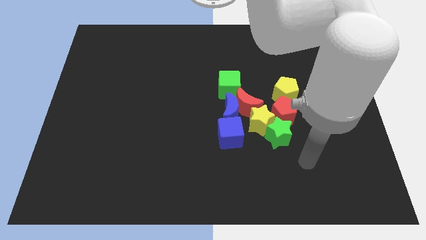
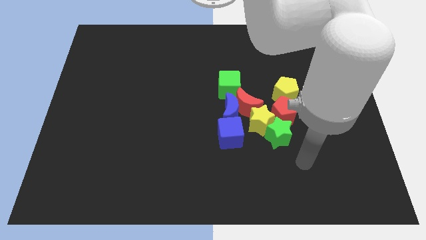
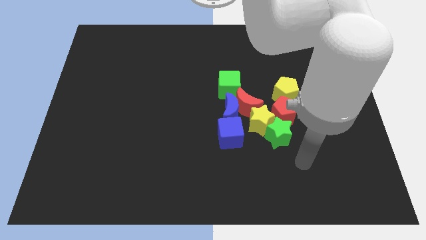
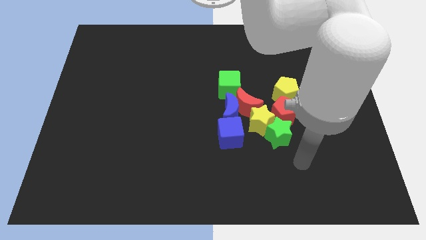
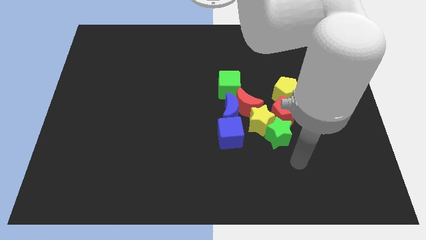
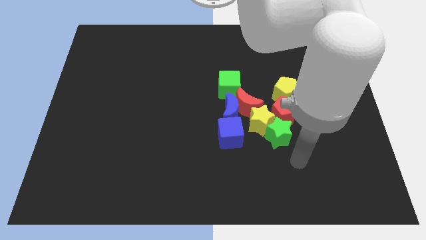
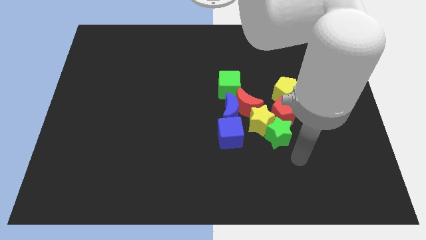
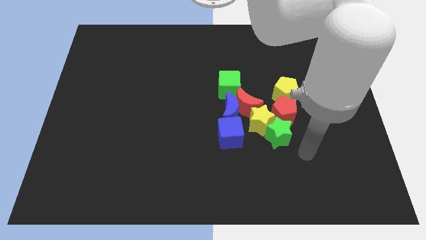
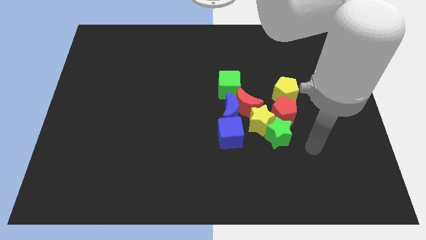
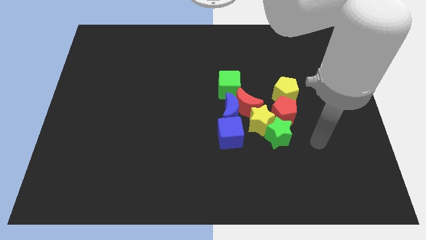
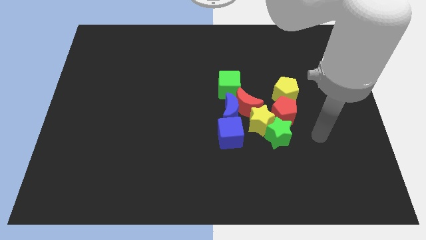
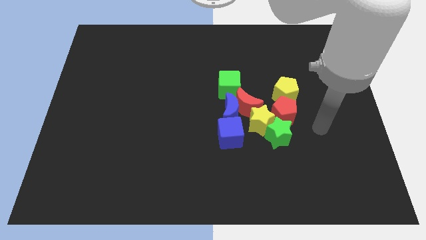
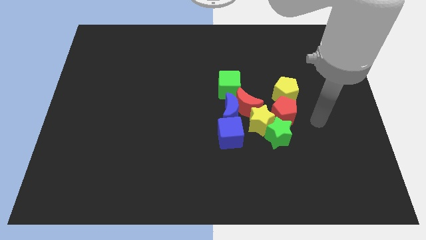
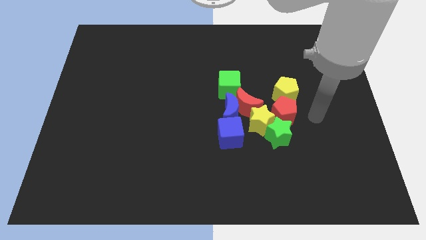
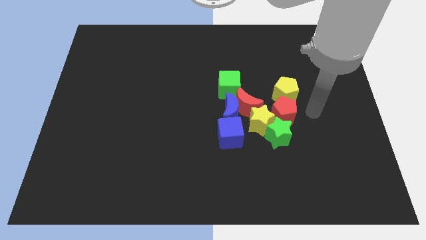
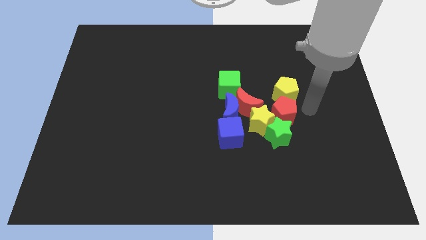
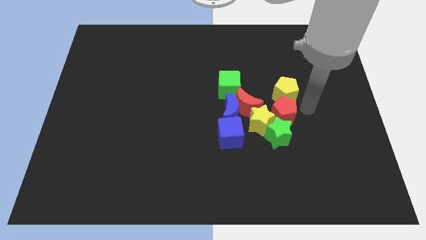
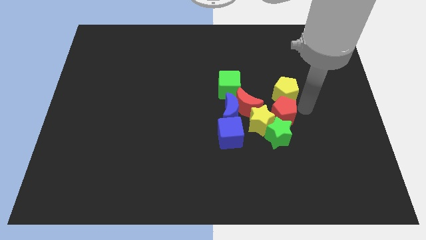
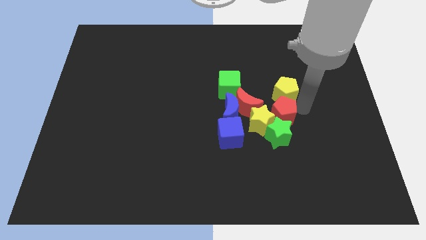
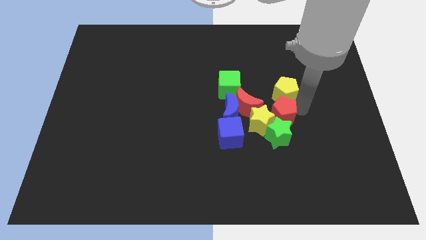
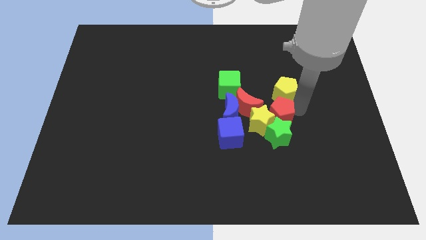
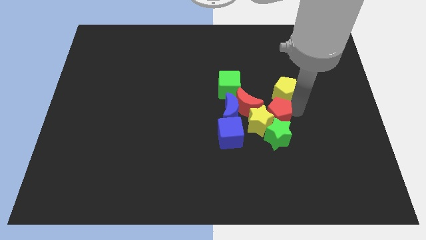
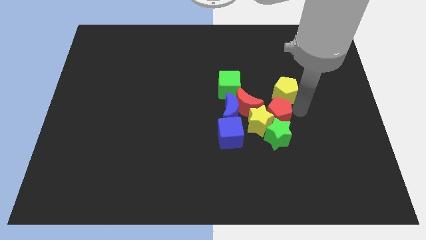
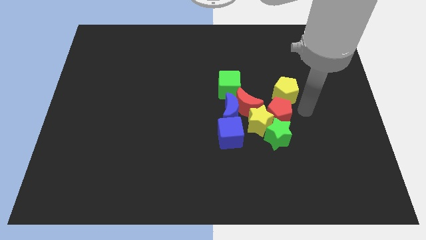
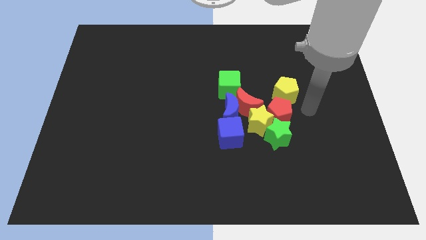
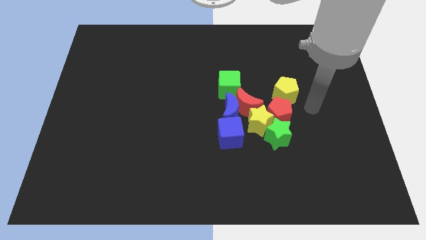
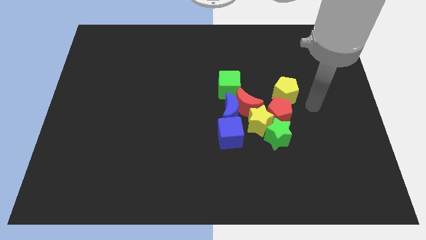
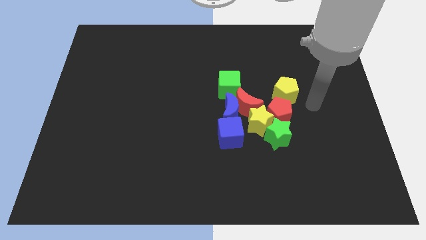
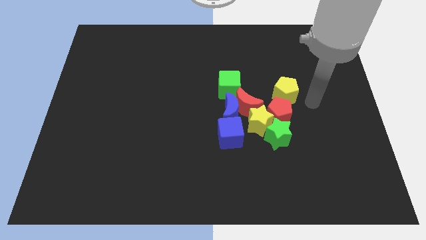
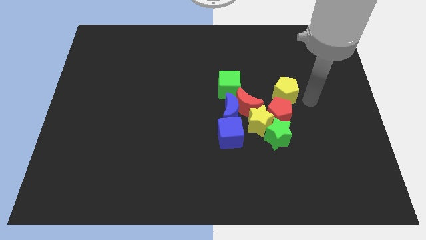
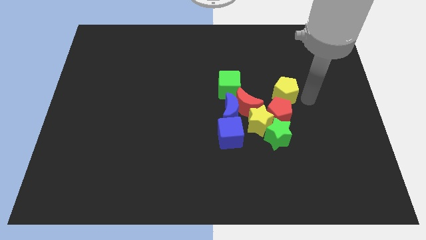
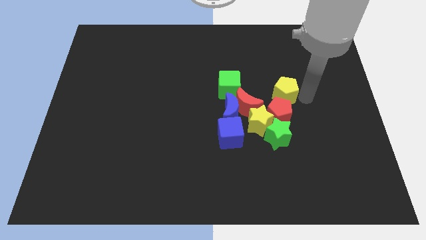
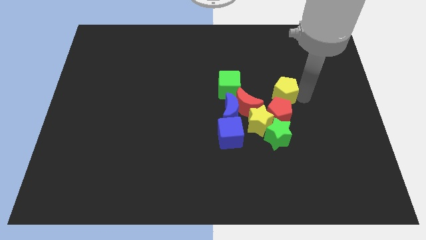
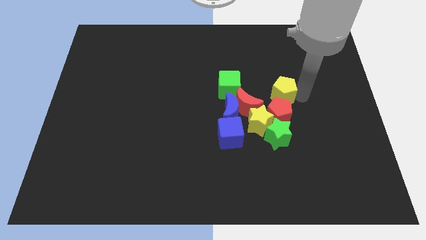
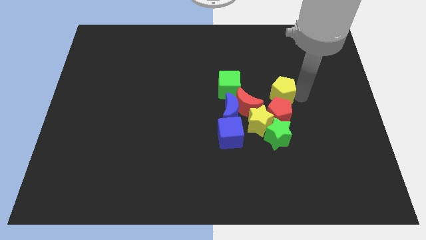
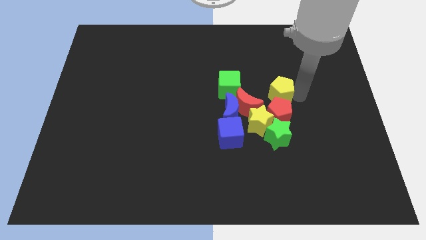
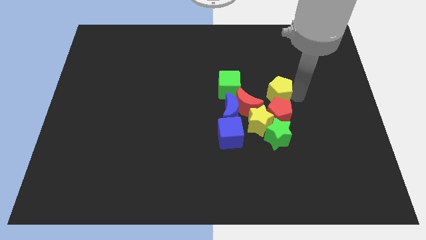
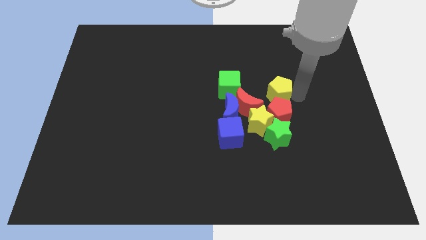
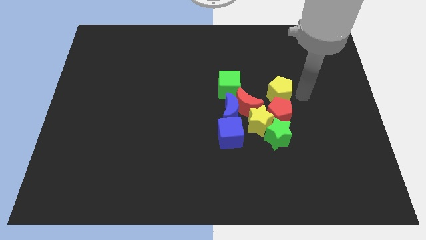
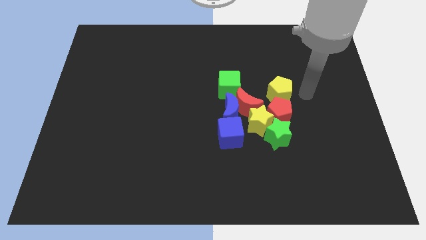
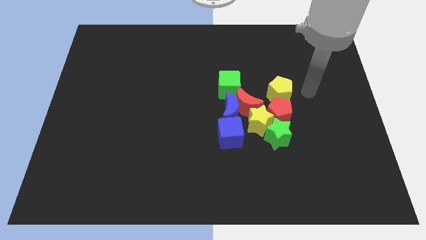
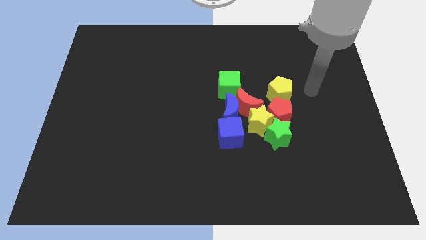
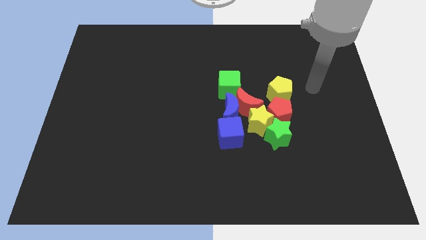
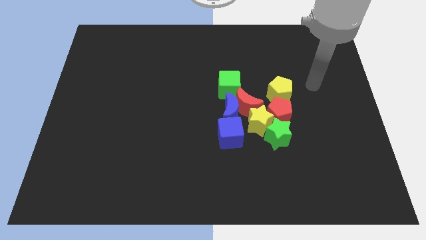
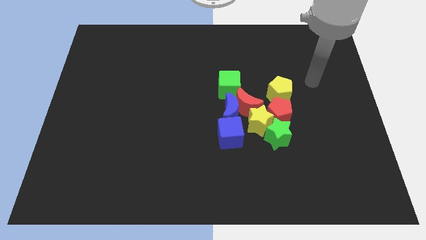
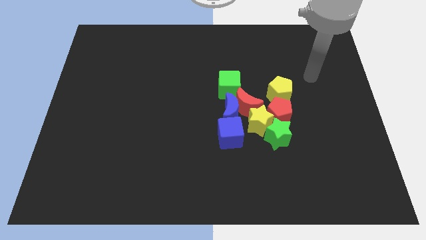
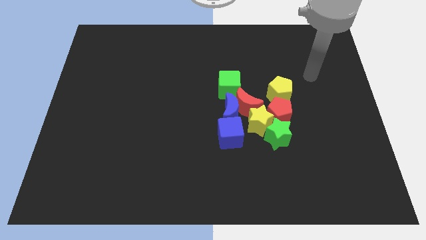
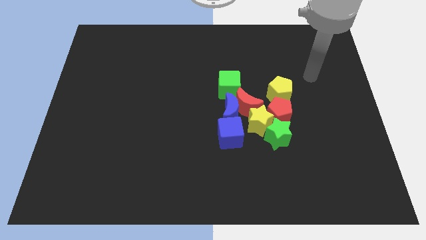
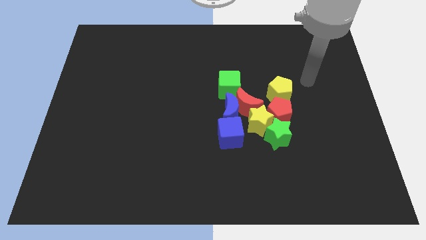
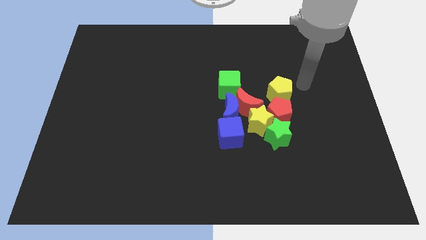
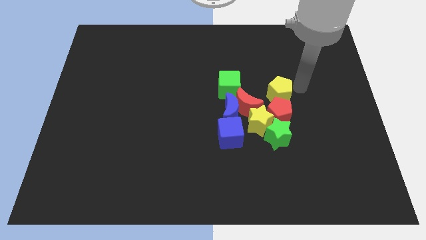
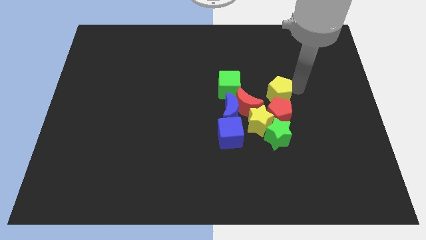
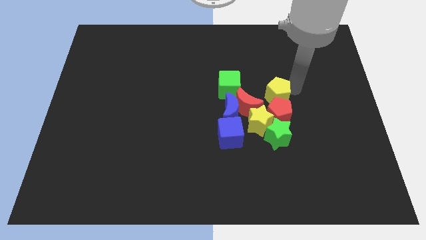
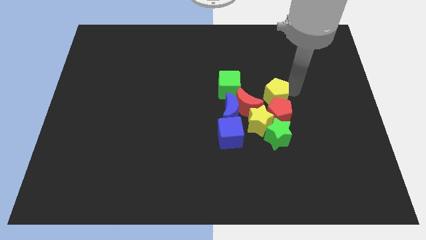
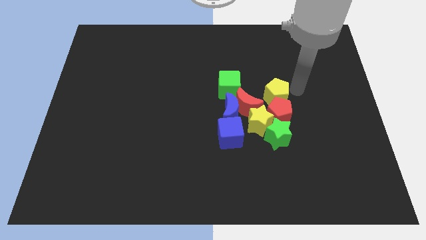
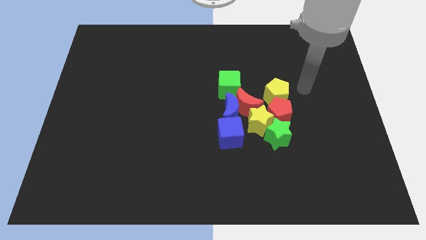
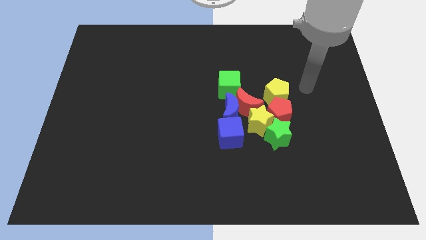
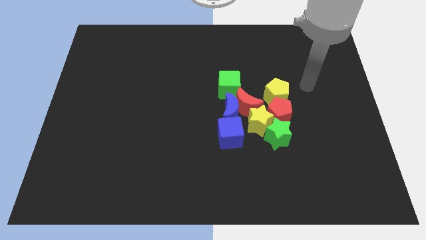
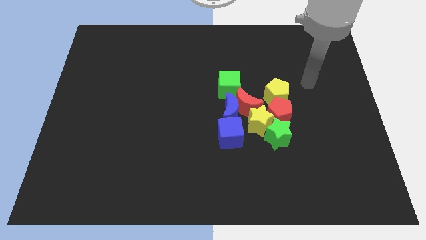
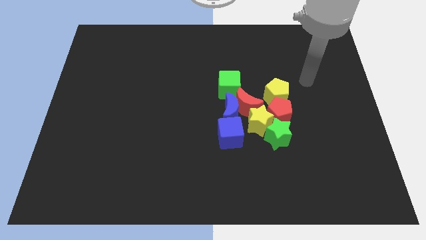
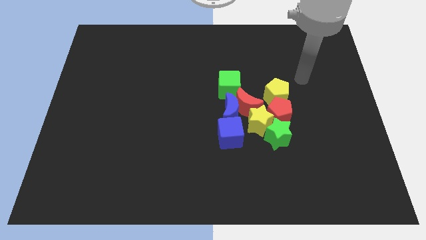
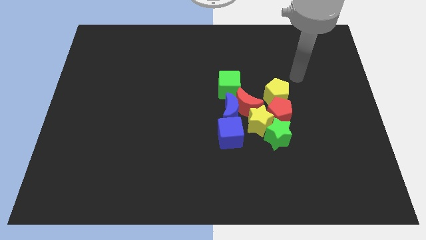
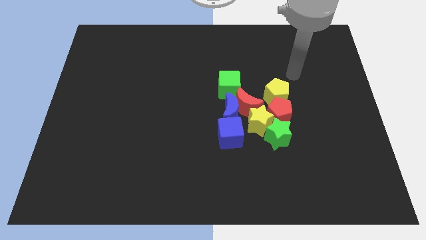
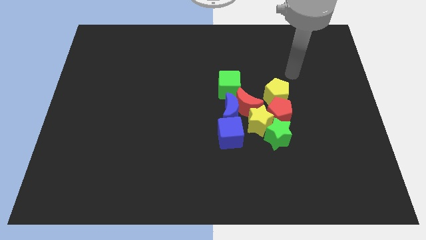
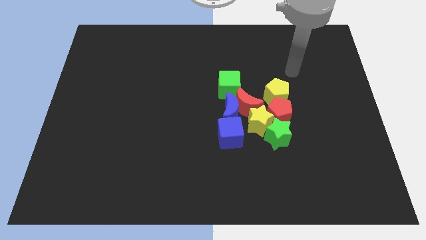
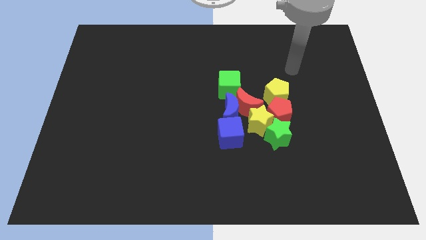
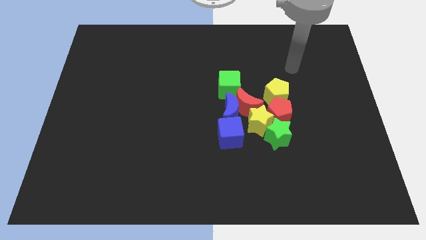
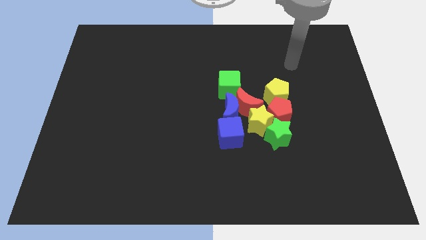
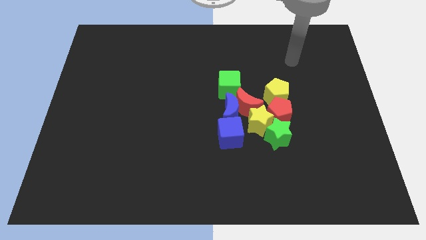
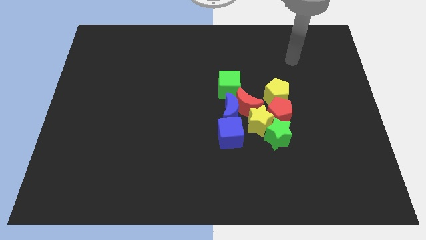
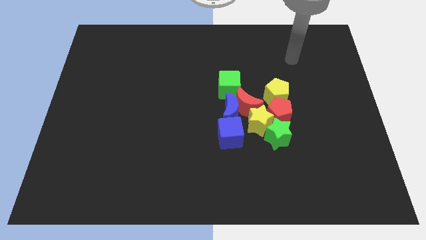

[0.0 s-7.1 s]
adjust the yellow pentagon to the top of the red pentagon

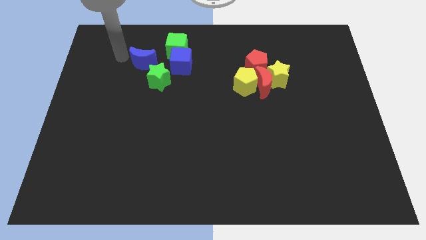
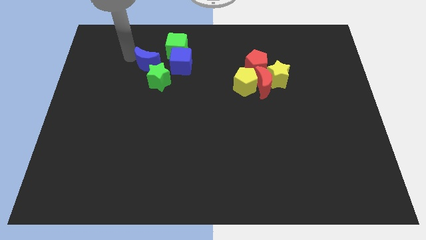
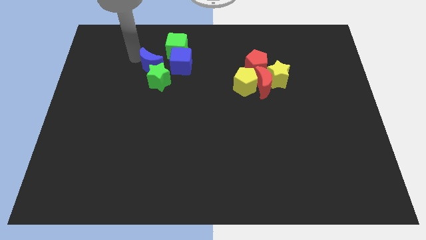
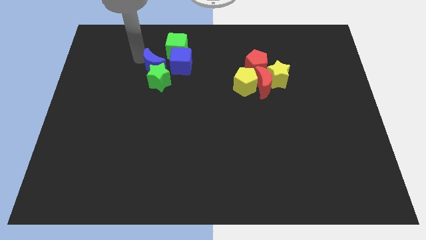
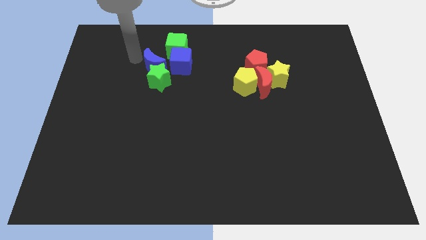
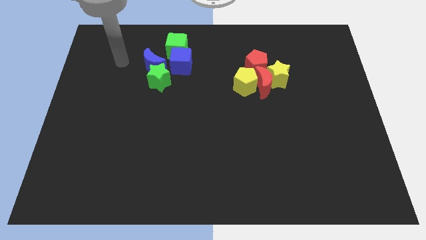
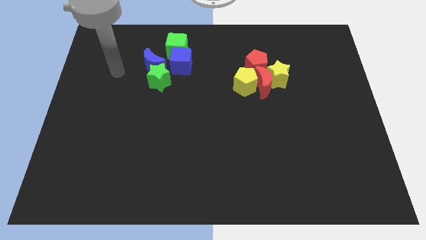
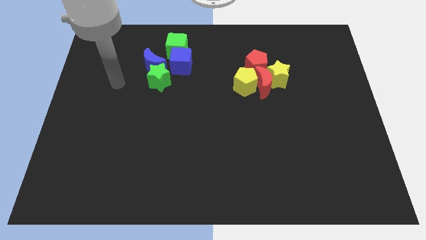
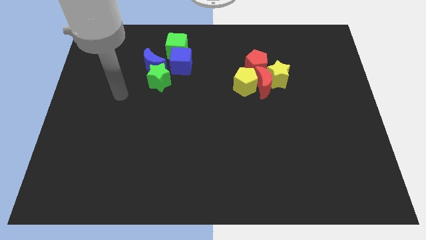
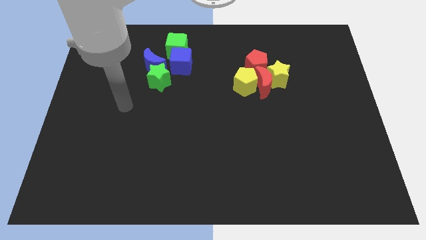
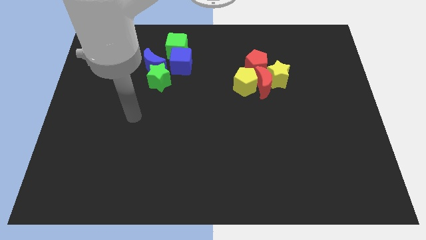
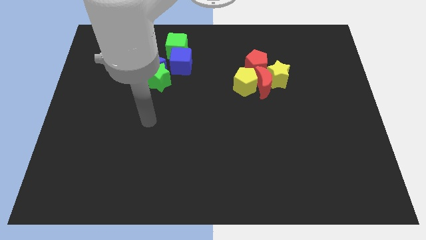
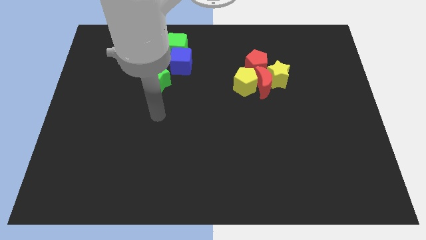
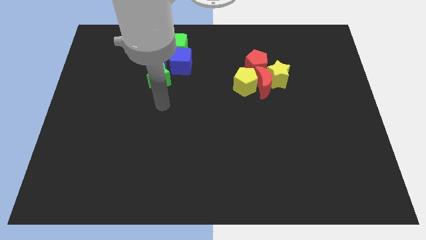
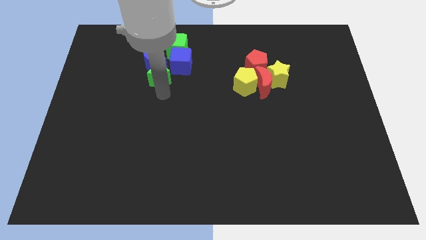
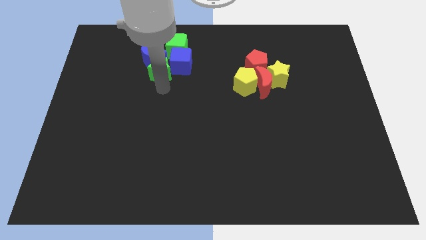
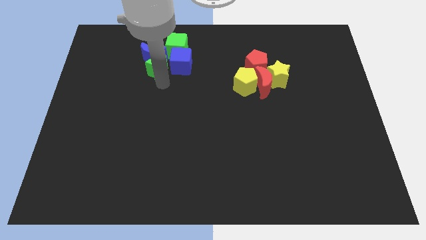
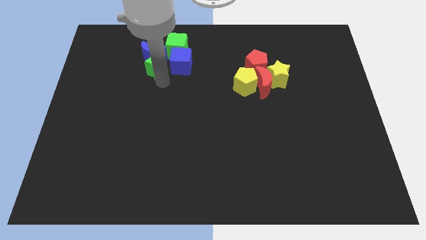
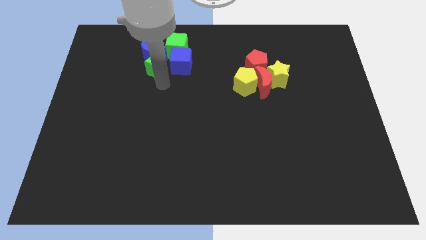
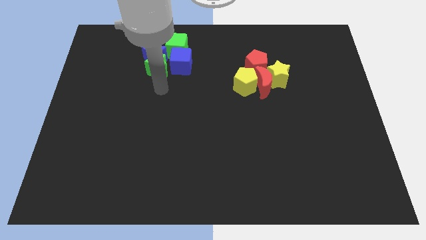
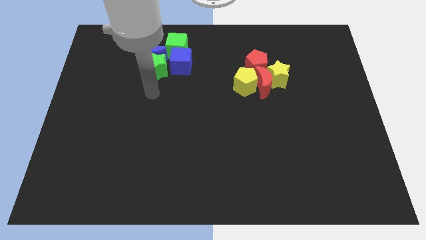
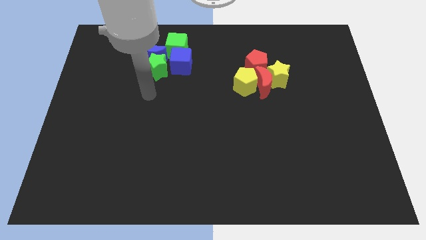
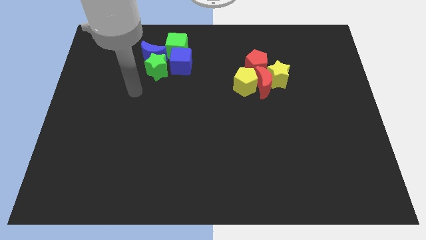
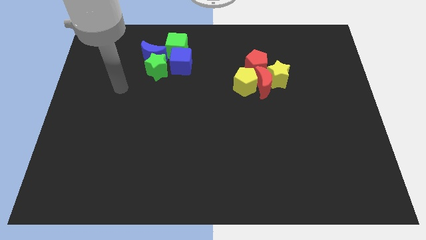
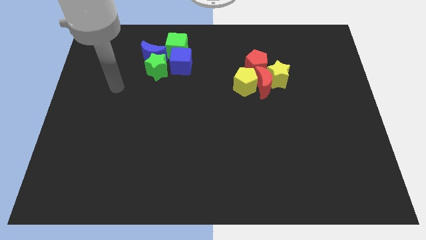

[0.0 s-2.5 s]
push the blue moon and the green star up slightly
